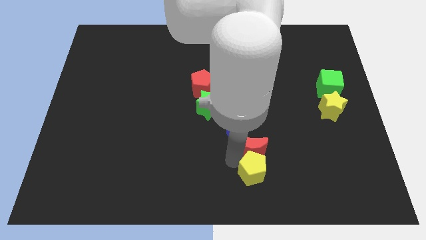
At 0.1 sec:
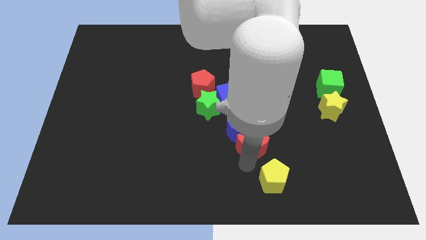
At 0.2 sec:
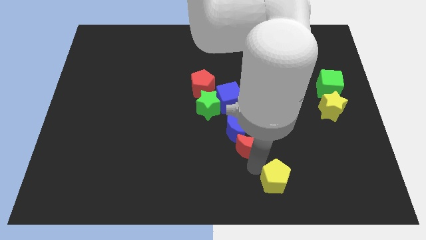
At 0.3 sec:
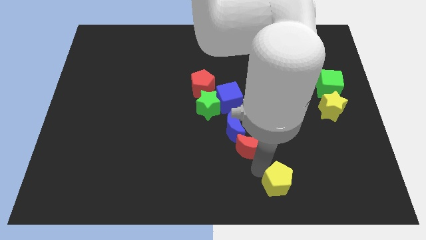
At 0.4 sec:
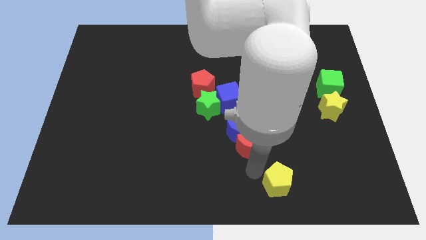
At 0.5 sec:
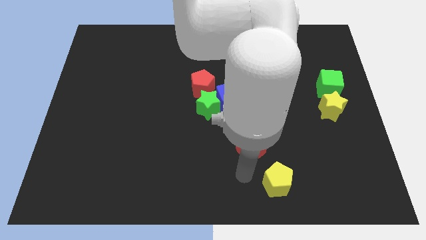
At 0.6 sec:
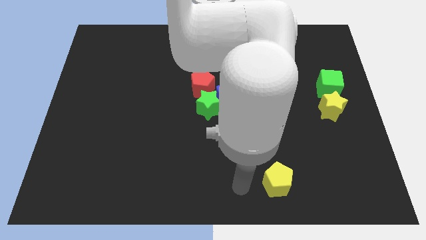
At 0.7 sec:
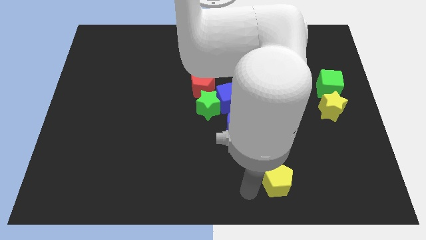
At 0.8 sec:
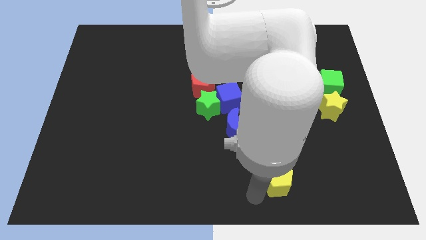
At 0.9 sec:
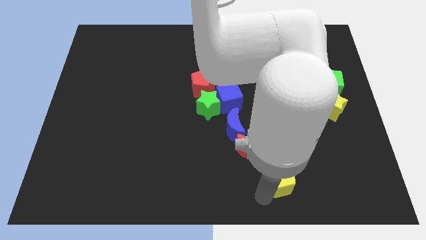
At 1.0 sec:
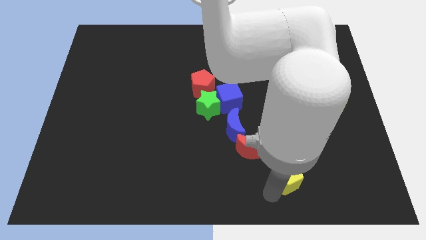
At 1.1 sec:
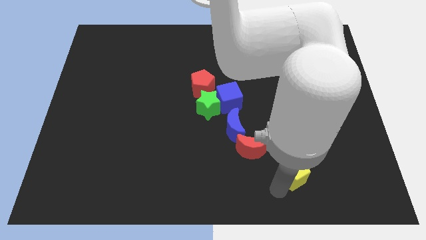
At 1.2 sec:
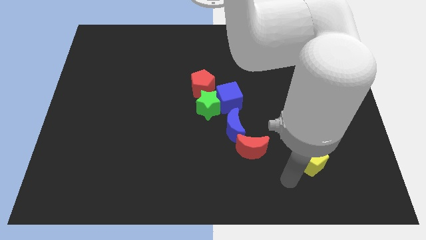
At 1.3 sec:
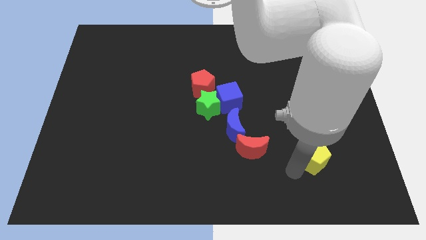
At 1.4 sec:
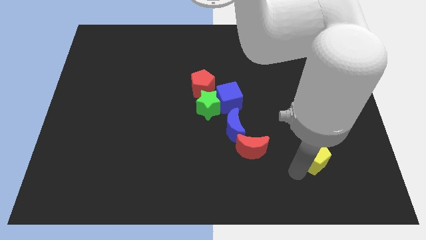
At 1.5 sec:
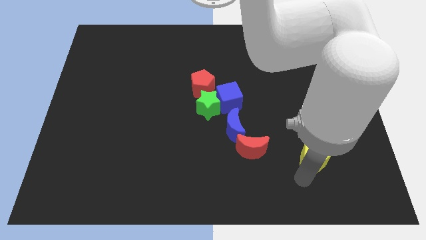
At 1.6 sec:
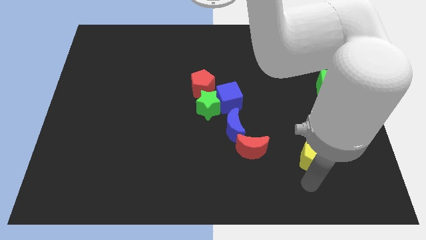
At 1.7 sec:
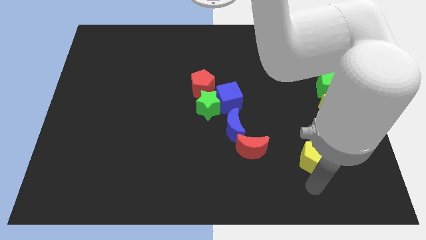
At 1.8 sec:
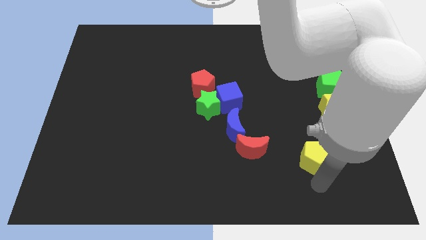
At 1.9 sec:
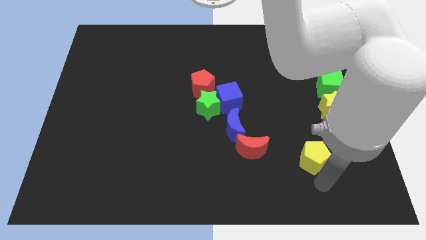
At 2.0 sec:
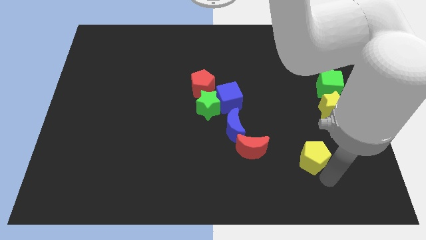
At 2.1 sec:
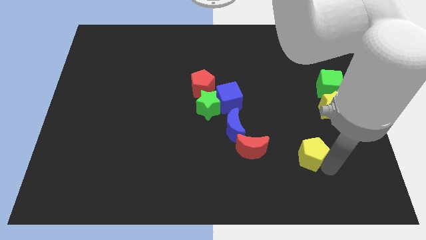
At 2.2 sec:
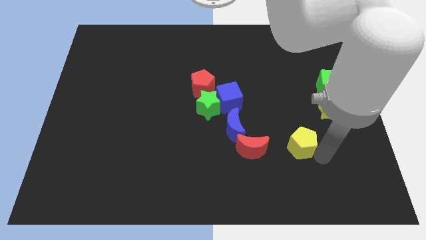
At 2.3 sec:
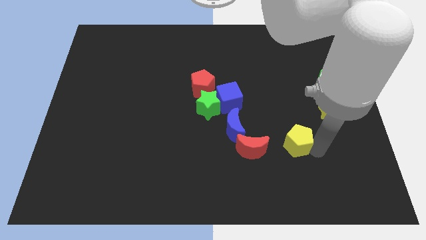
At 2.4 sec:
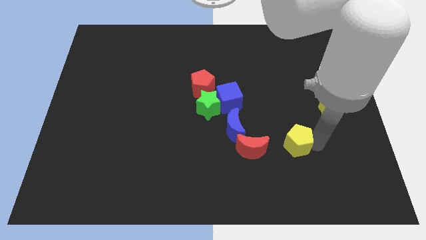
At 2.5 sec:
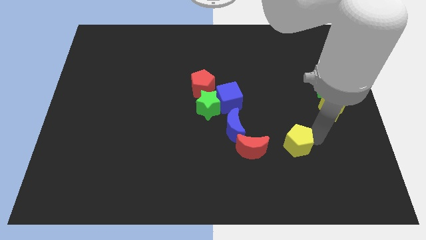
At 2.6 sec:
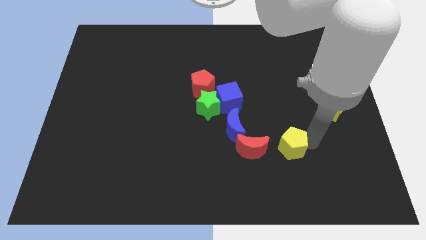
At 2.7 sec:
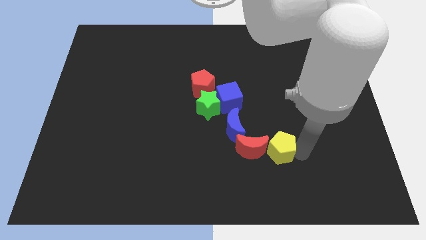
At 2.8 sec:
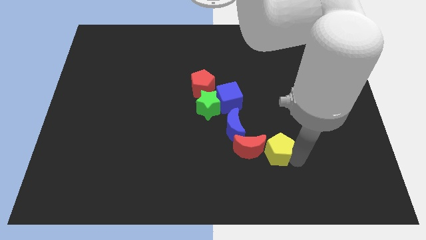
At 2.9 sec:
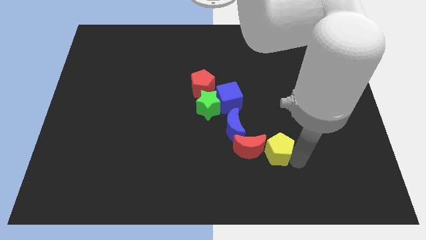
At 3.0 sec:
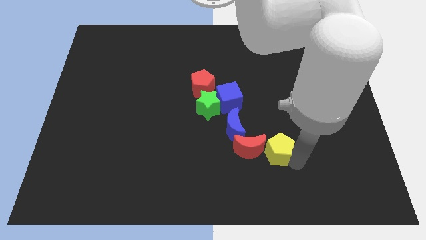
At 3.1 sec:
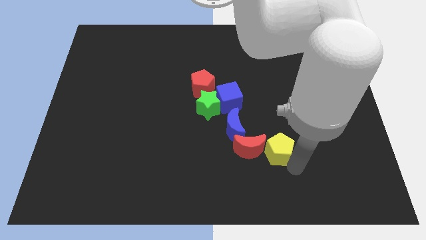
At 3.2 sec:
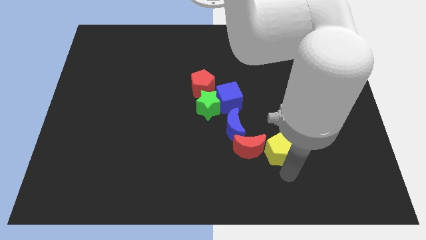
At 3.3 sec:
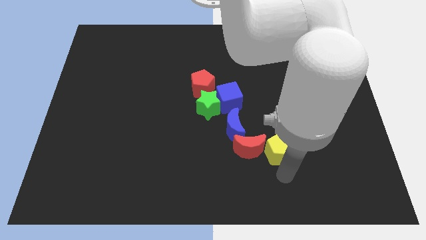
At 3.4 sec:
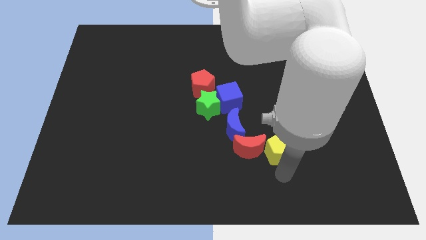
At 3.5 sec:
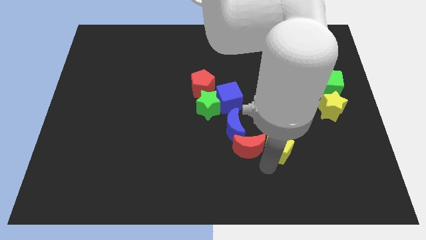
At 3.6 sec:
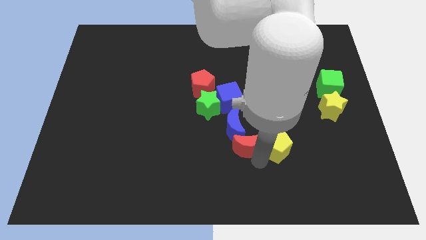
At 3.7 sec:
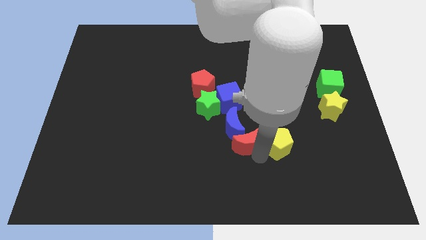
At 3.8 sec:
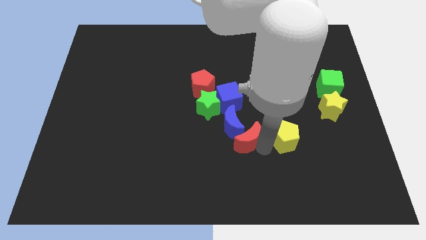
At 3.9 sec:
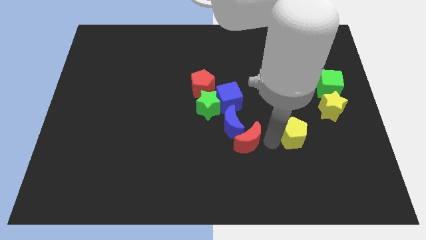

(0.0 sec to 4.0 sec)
move the yellow pentagon to the right of the red crescent

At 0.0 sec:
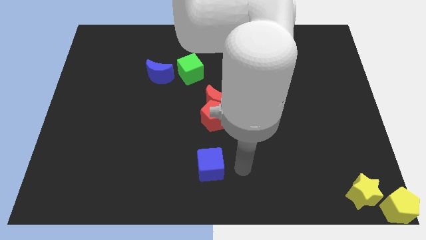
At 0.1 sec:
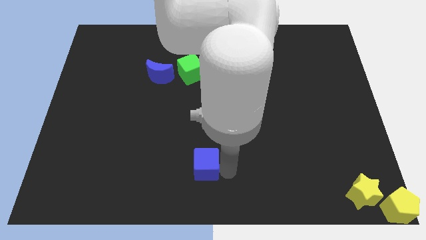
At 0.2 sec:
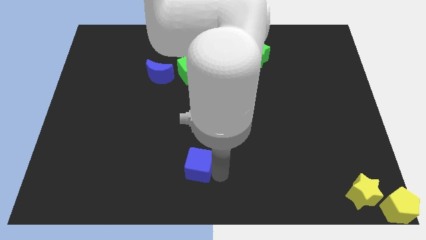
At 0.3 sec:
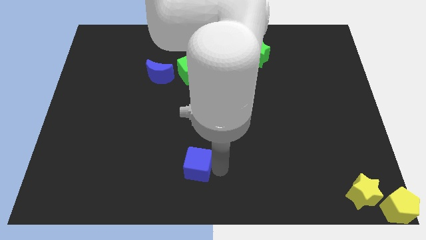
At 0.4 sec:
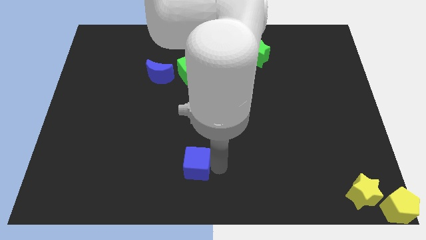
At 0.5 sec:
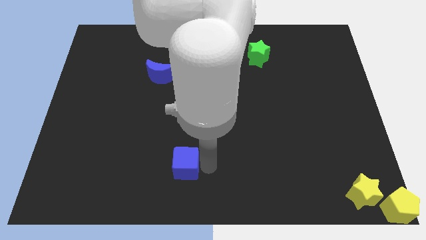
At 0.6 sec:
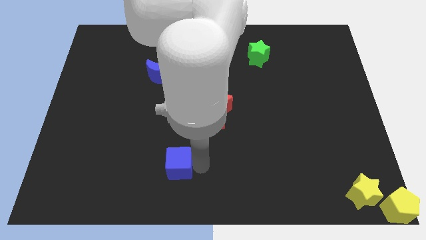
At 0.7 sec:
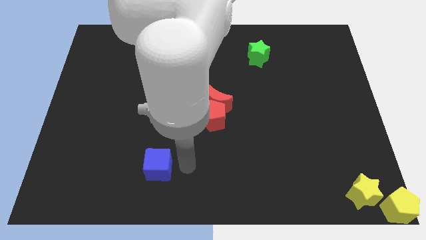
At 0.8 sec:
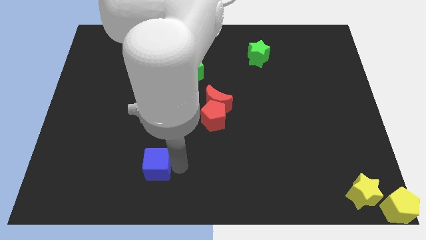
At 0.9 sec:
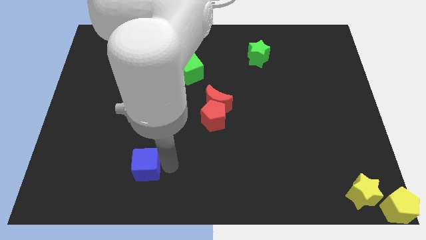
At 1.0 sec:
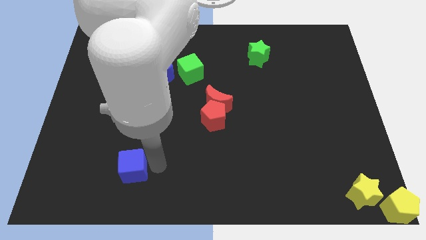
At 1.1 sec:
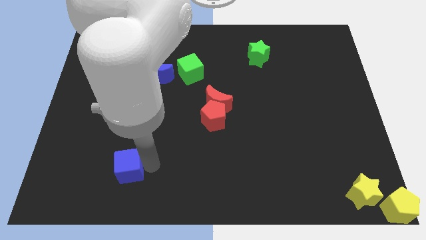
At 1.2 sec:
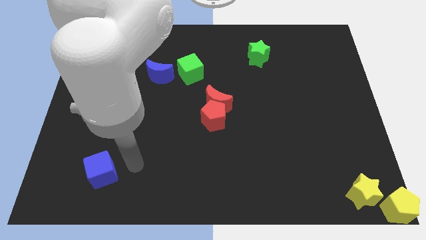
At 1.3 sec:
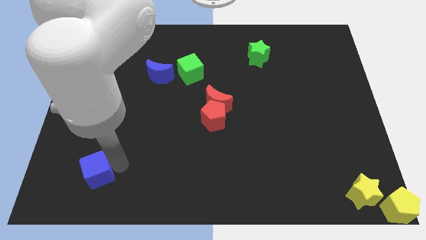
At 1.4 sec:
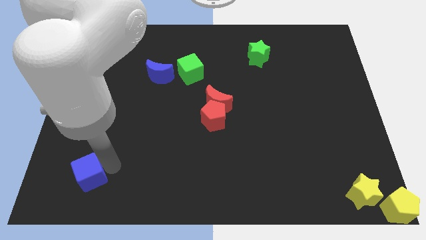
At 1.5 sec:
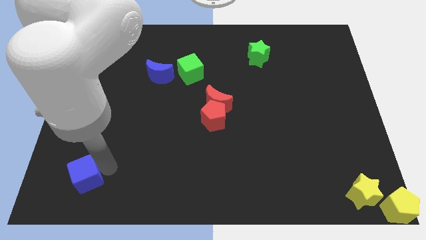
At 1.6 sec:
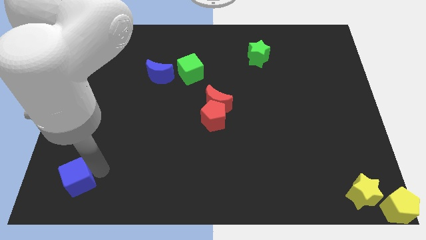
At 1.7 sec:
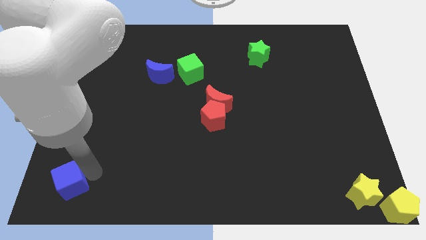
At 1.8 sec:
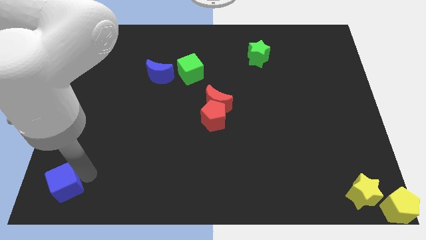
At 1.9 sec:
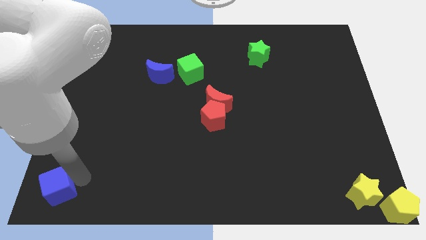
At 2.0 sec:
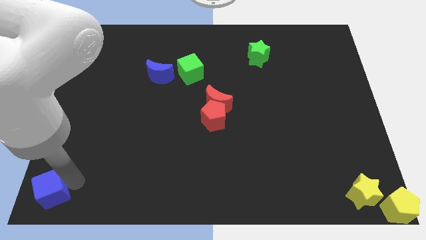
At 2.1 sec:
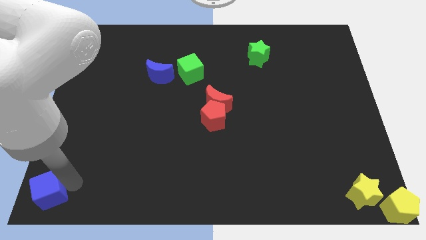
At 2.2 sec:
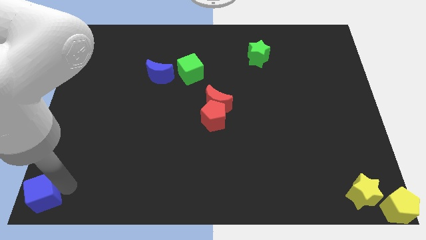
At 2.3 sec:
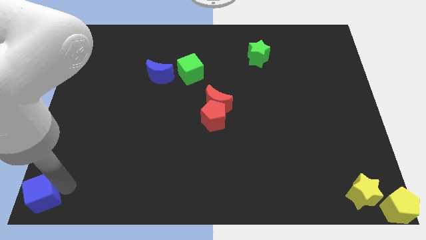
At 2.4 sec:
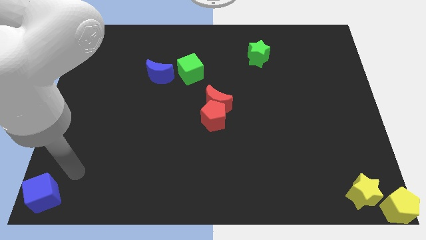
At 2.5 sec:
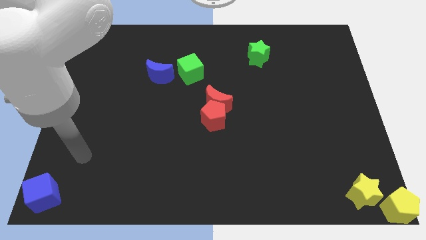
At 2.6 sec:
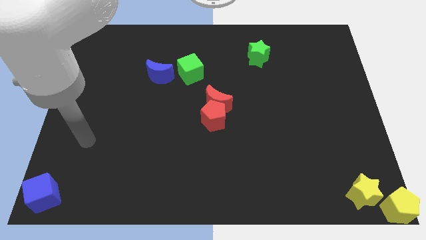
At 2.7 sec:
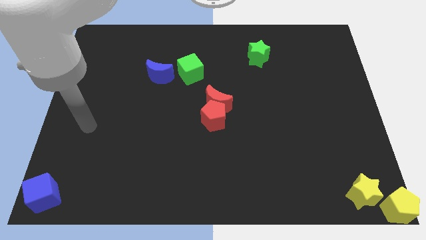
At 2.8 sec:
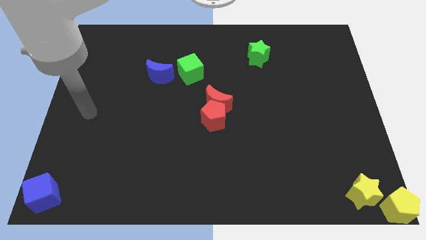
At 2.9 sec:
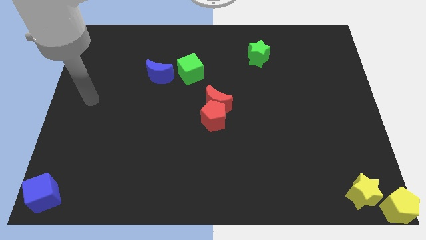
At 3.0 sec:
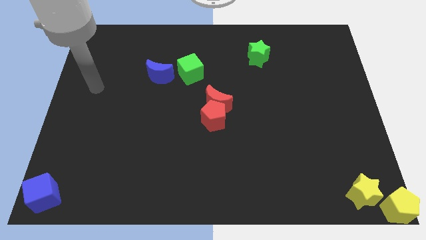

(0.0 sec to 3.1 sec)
move the blue cube to bottom left

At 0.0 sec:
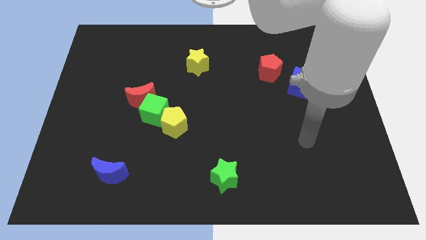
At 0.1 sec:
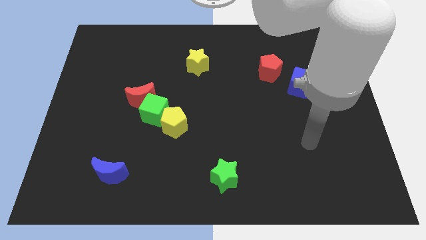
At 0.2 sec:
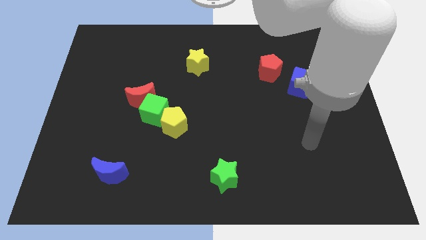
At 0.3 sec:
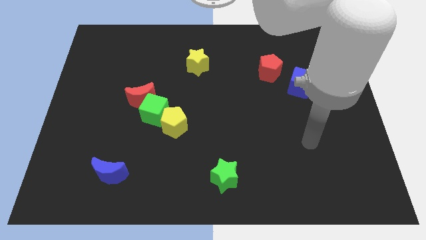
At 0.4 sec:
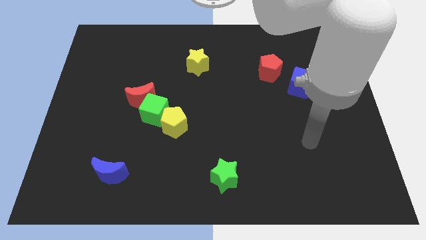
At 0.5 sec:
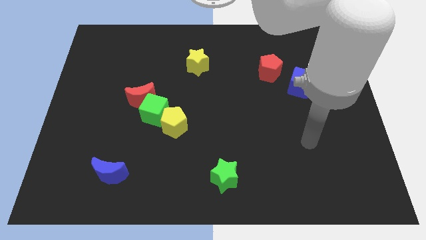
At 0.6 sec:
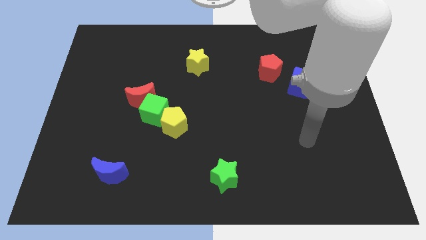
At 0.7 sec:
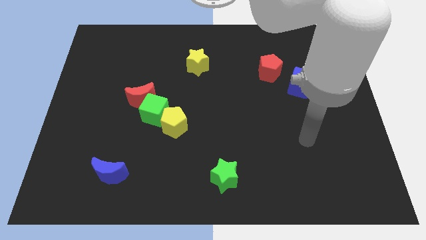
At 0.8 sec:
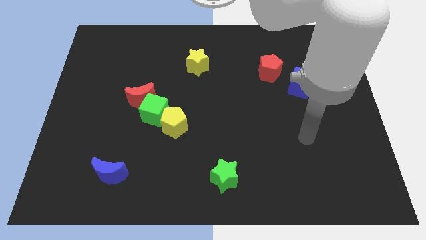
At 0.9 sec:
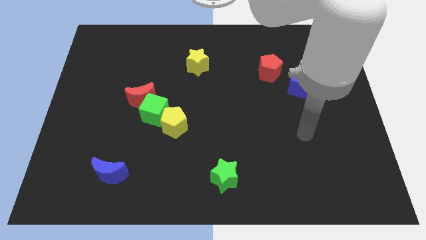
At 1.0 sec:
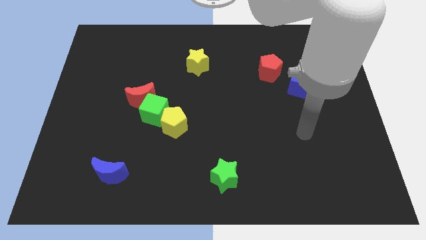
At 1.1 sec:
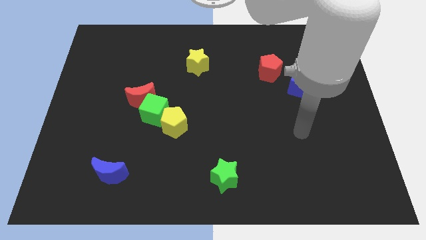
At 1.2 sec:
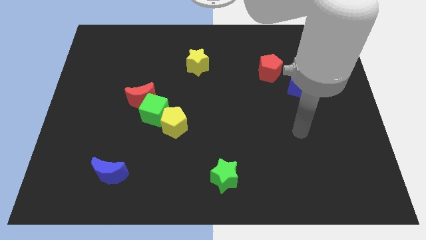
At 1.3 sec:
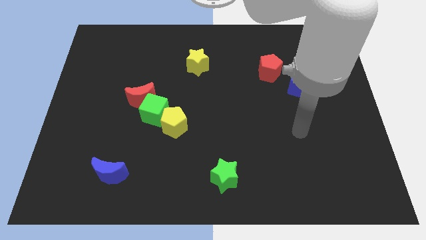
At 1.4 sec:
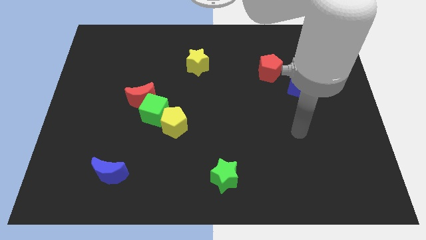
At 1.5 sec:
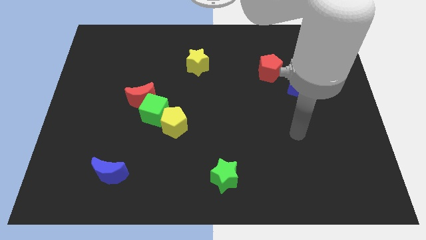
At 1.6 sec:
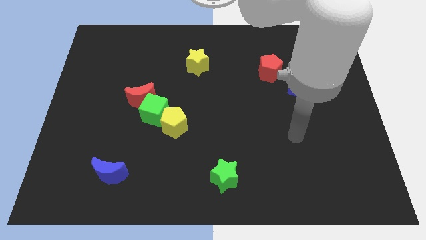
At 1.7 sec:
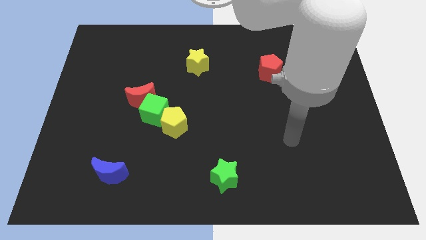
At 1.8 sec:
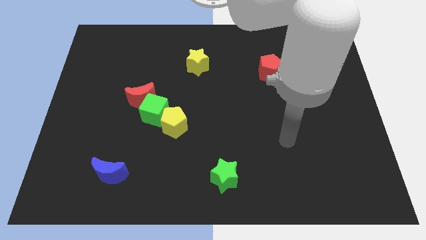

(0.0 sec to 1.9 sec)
move your hand towards the left side
